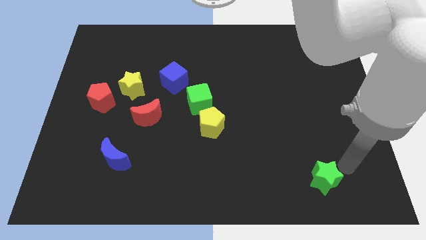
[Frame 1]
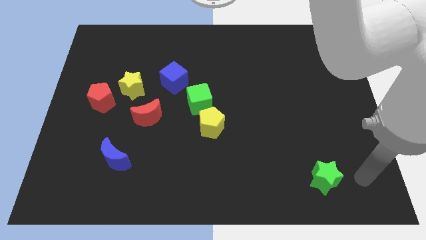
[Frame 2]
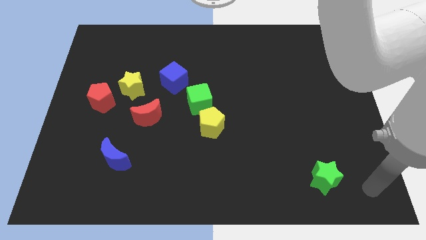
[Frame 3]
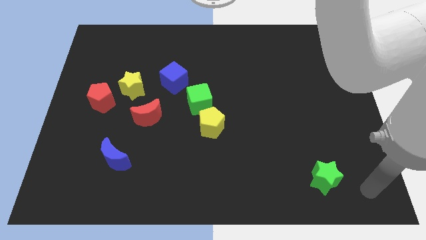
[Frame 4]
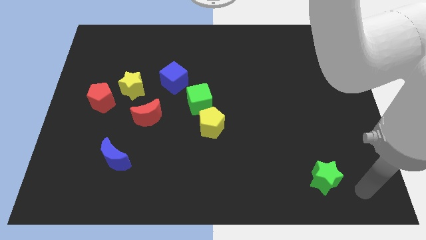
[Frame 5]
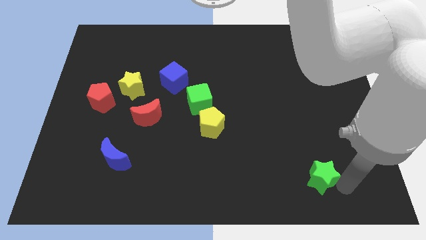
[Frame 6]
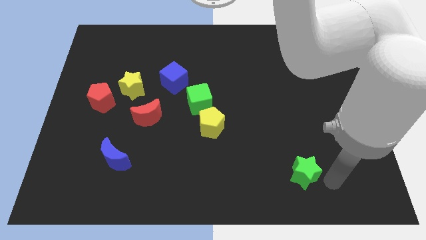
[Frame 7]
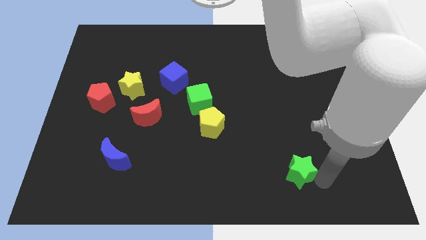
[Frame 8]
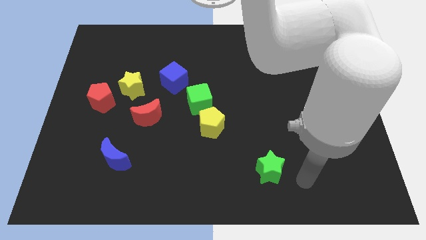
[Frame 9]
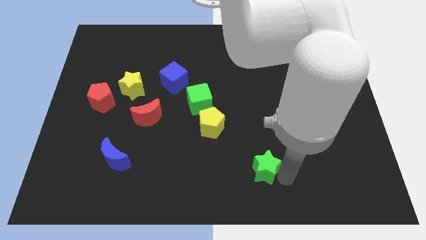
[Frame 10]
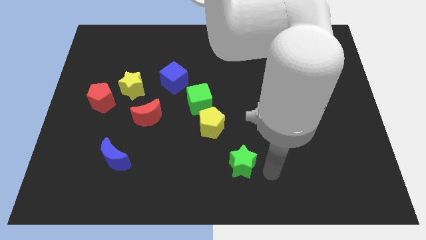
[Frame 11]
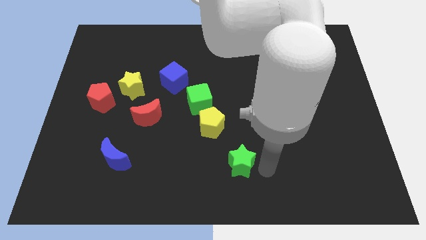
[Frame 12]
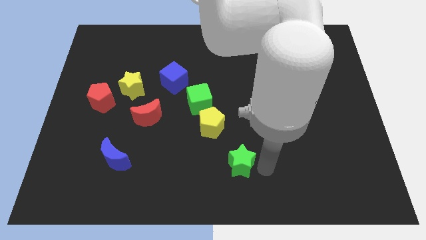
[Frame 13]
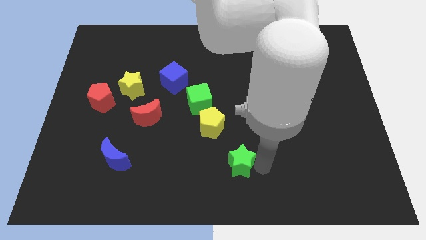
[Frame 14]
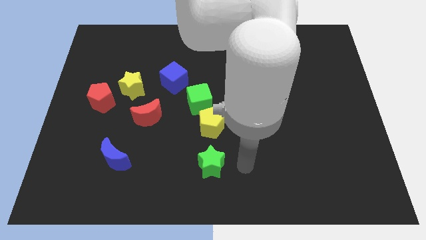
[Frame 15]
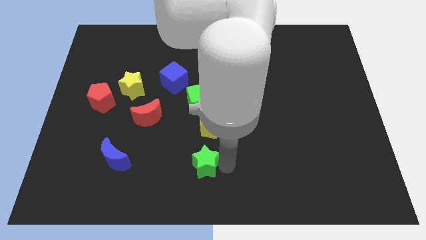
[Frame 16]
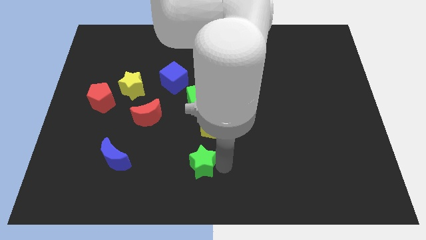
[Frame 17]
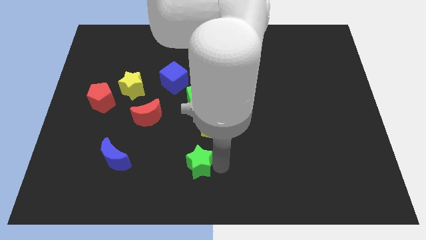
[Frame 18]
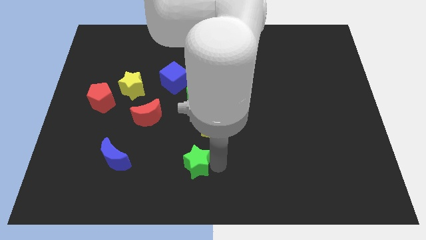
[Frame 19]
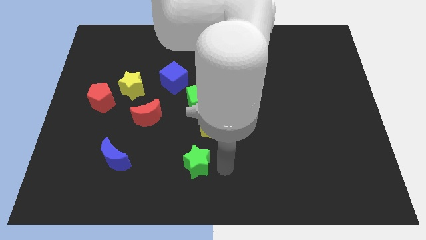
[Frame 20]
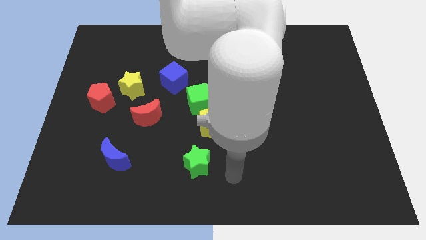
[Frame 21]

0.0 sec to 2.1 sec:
move the green star below yellow pentagon

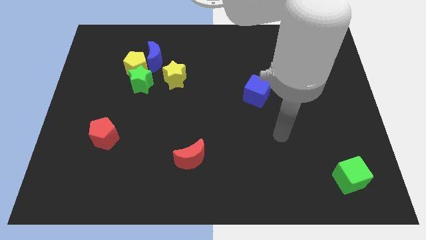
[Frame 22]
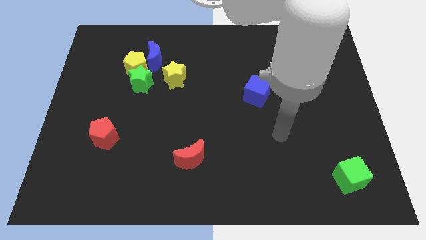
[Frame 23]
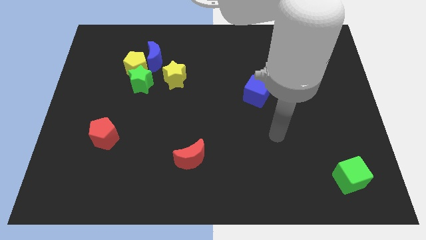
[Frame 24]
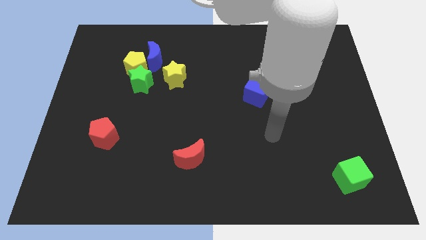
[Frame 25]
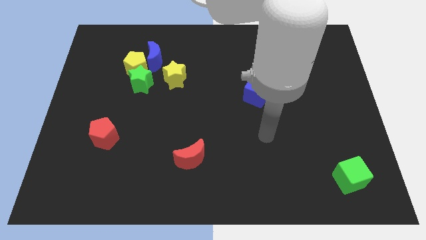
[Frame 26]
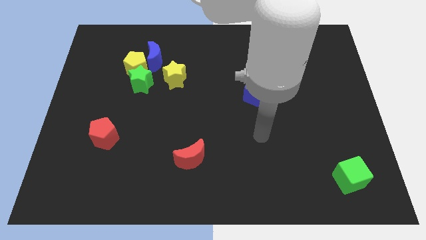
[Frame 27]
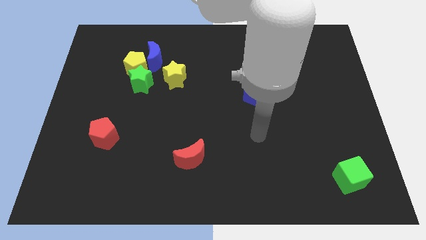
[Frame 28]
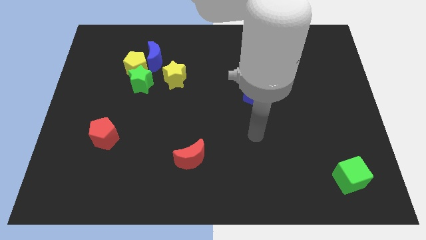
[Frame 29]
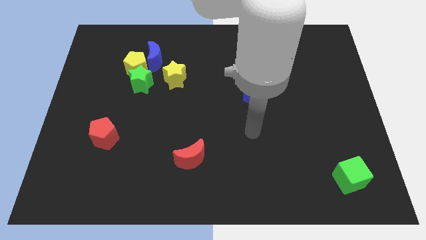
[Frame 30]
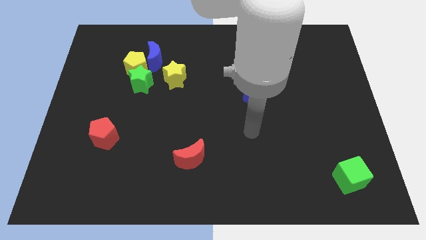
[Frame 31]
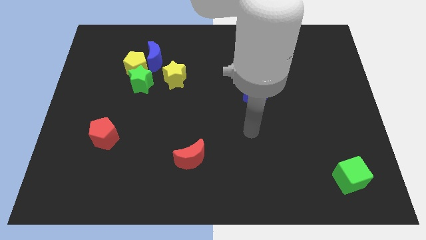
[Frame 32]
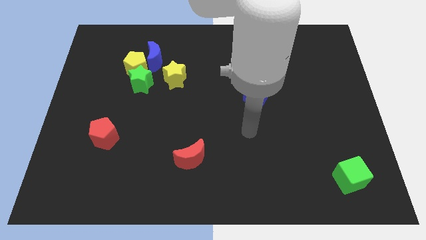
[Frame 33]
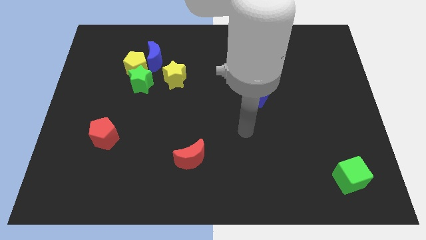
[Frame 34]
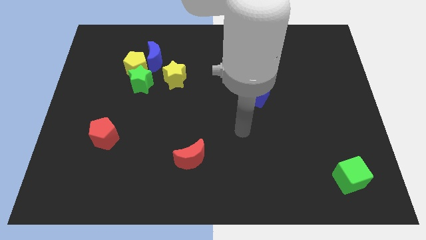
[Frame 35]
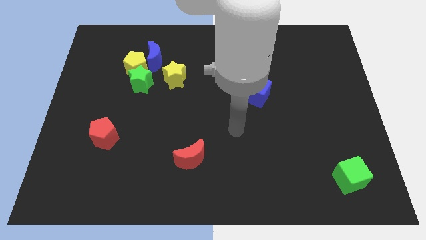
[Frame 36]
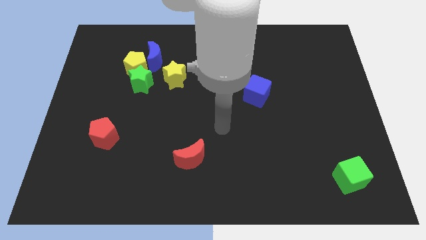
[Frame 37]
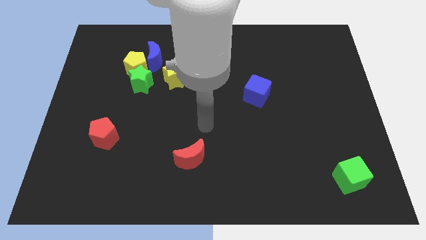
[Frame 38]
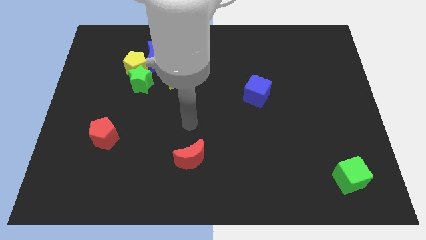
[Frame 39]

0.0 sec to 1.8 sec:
move your arm to the top of red crescent

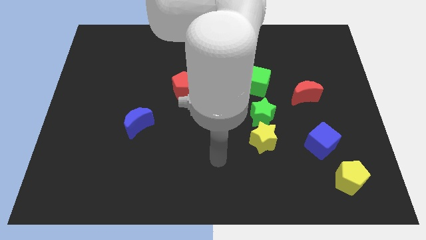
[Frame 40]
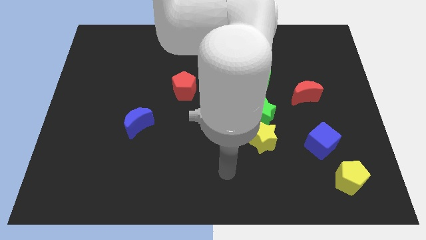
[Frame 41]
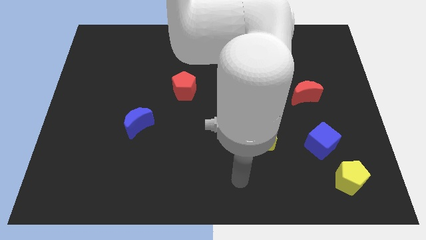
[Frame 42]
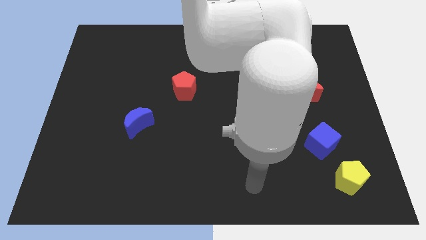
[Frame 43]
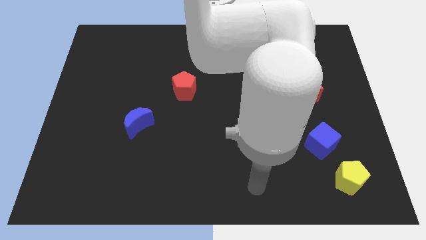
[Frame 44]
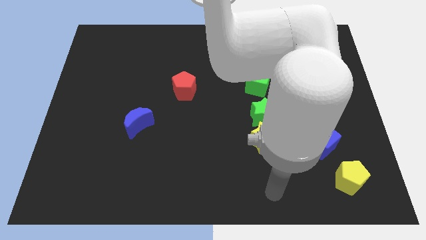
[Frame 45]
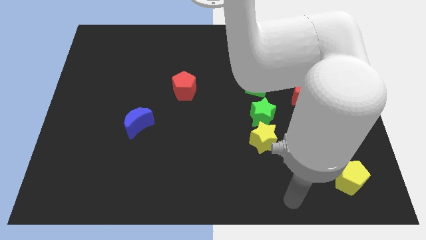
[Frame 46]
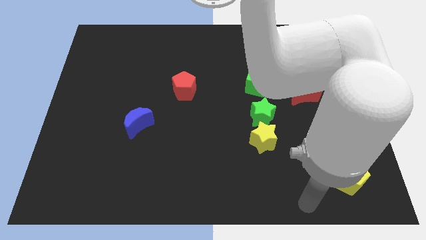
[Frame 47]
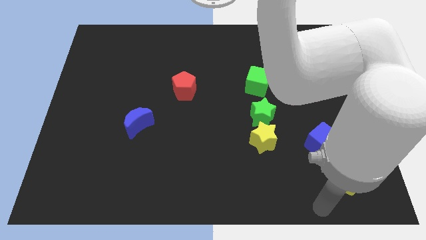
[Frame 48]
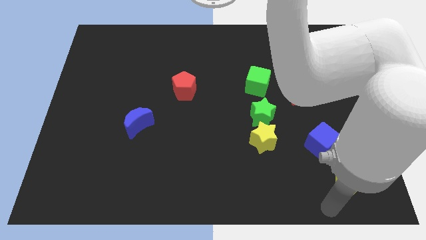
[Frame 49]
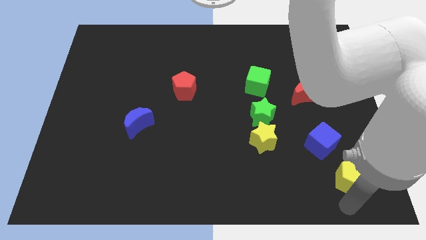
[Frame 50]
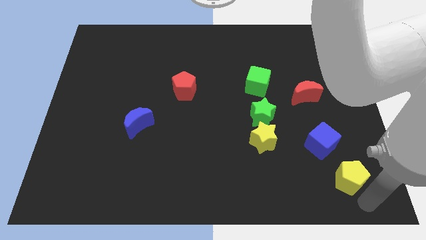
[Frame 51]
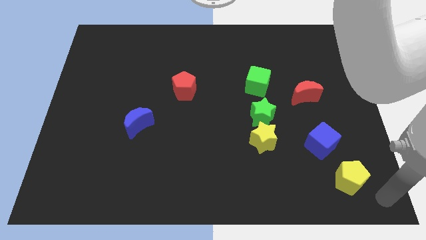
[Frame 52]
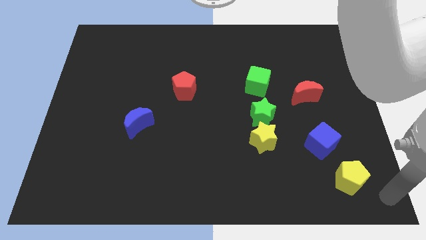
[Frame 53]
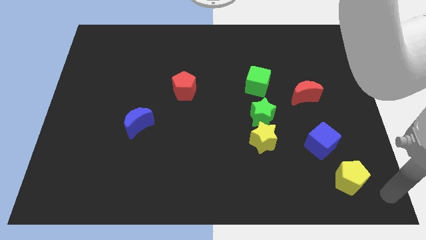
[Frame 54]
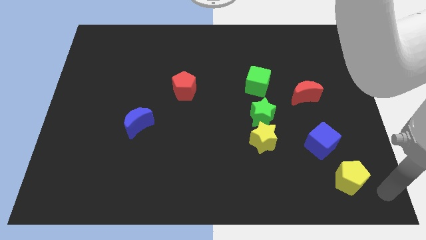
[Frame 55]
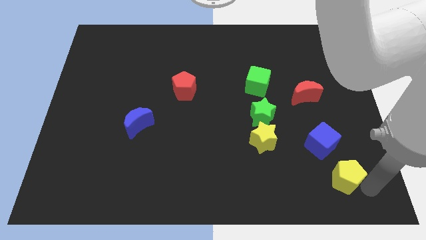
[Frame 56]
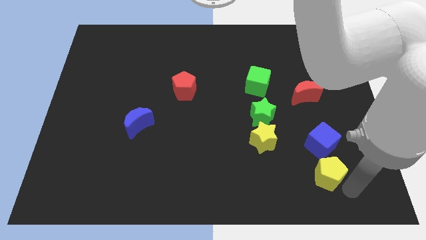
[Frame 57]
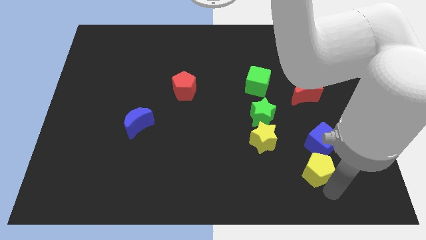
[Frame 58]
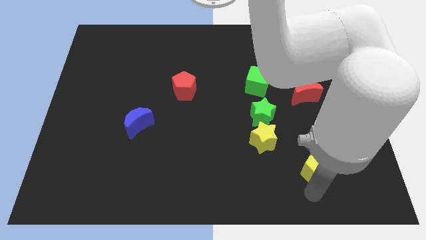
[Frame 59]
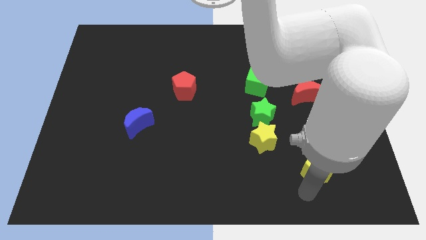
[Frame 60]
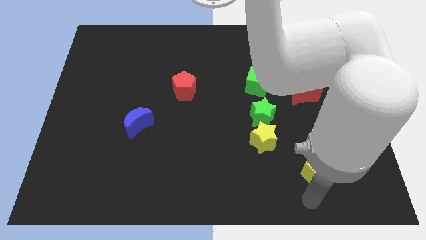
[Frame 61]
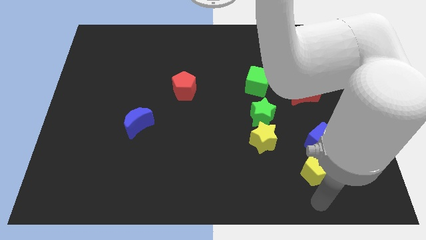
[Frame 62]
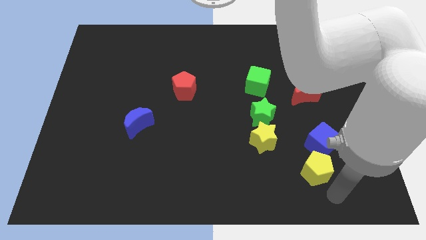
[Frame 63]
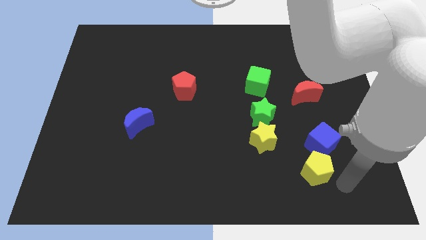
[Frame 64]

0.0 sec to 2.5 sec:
move the yellow pentagon below the blue cube

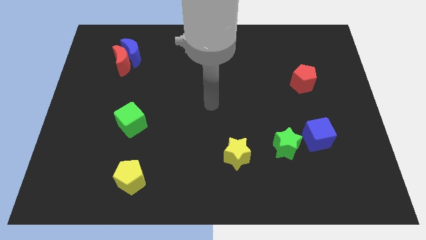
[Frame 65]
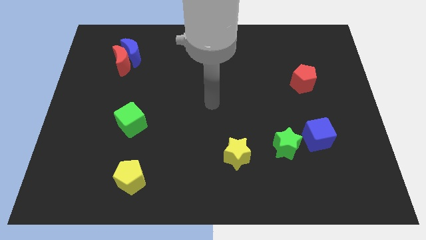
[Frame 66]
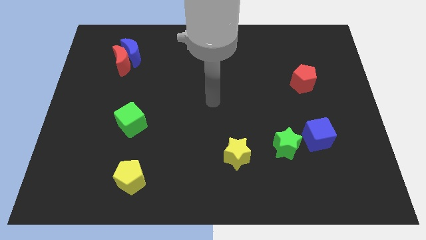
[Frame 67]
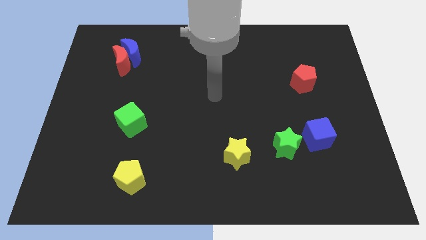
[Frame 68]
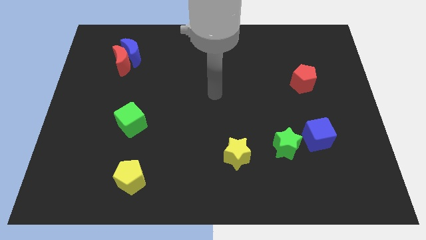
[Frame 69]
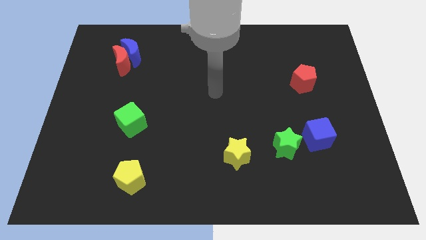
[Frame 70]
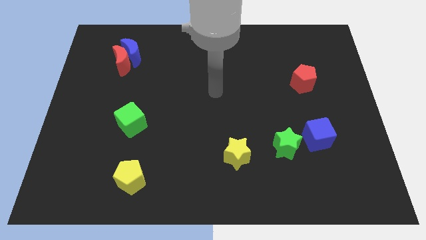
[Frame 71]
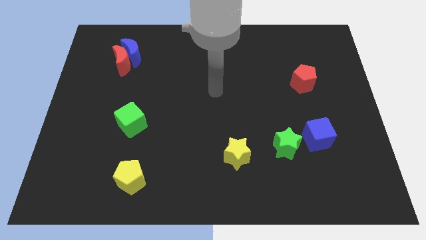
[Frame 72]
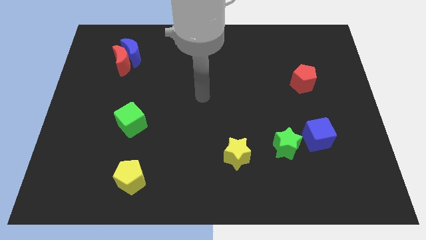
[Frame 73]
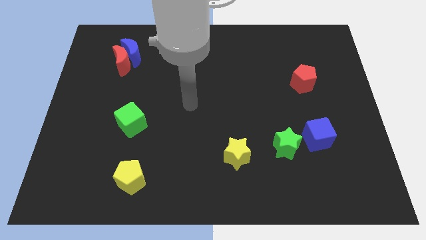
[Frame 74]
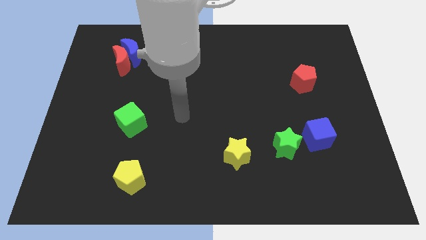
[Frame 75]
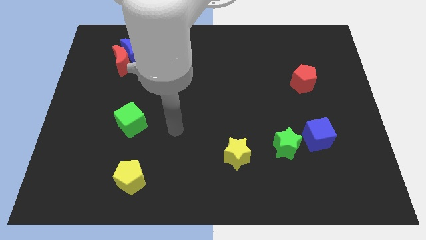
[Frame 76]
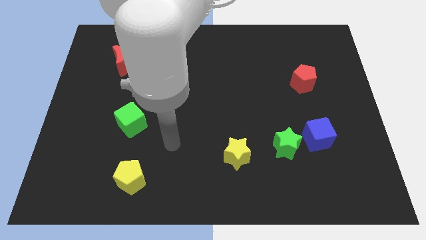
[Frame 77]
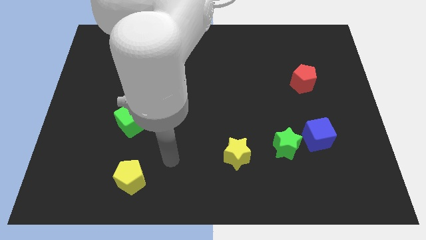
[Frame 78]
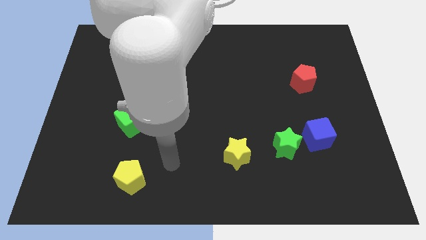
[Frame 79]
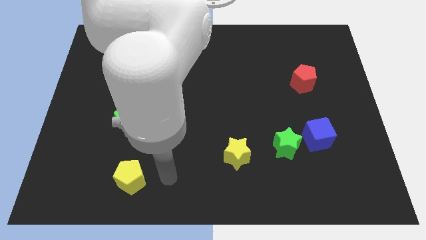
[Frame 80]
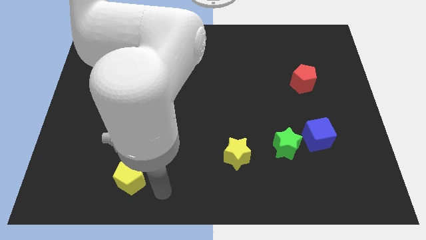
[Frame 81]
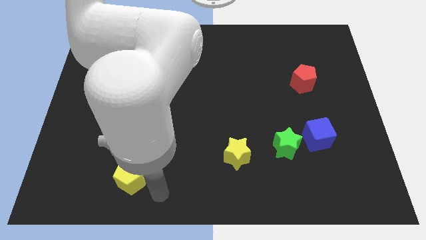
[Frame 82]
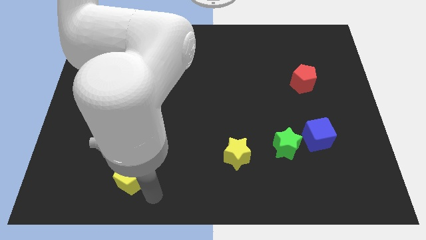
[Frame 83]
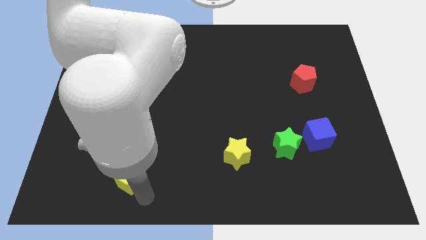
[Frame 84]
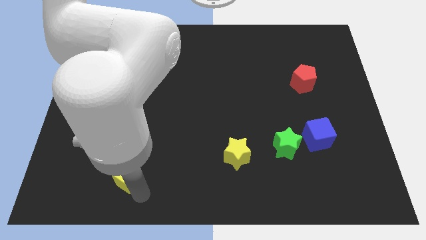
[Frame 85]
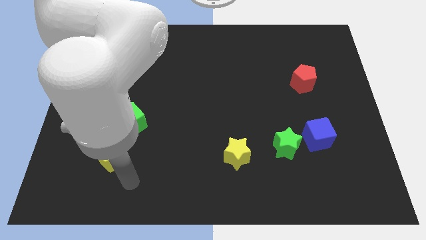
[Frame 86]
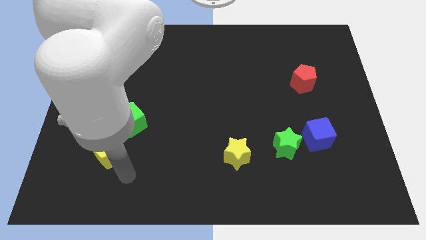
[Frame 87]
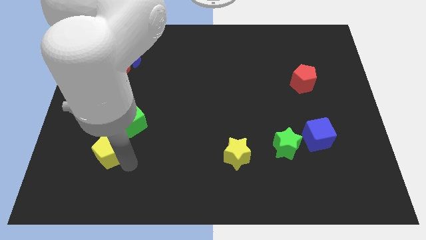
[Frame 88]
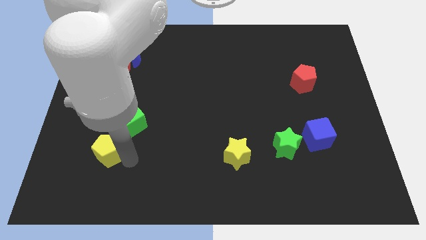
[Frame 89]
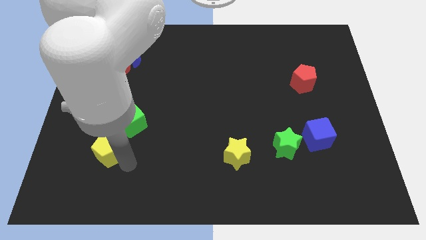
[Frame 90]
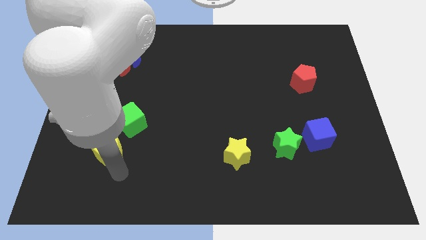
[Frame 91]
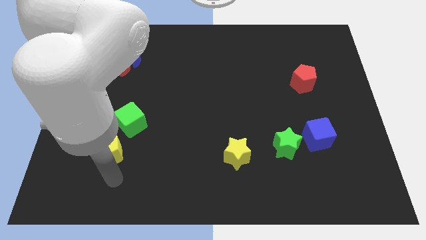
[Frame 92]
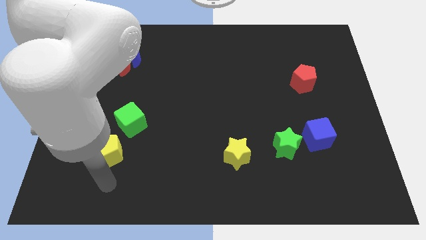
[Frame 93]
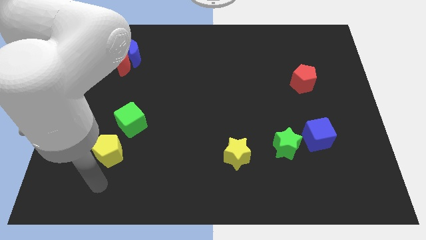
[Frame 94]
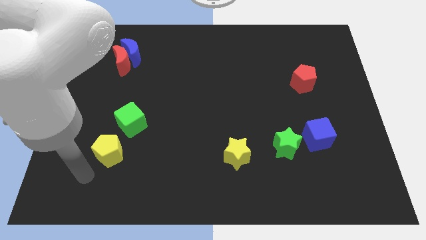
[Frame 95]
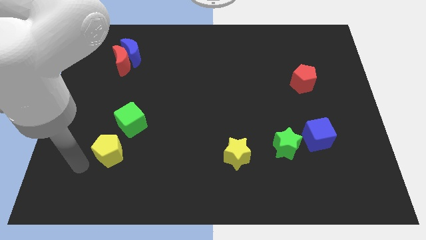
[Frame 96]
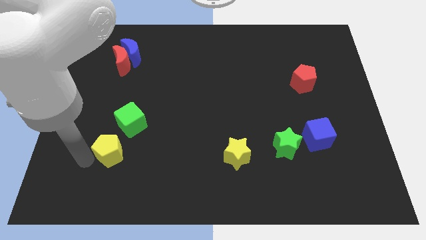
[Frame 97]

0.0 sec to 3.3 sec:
point the arm to the left of the yellow pentagon
